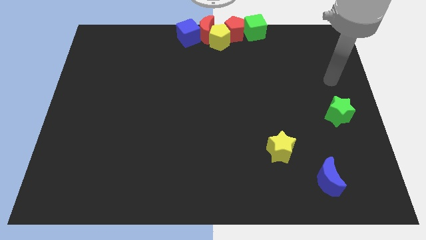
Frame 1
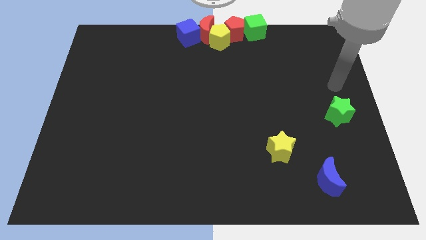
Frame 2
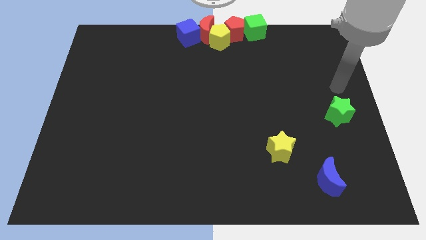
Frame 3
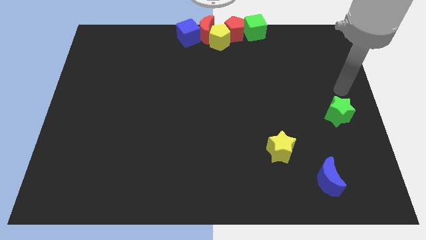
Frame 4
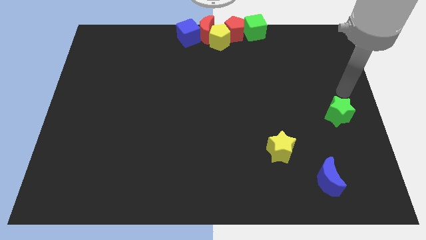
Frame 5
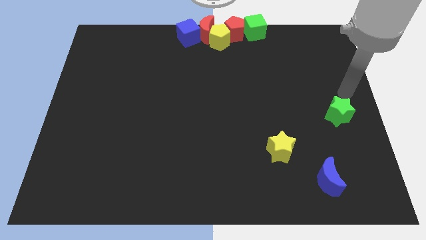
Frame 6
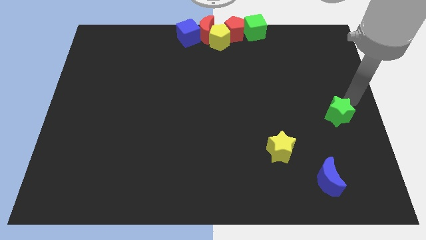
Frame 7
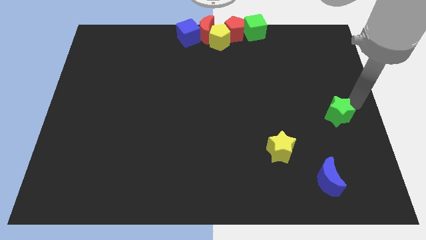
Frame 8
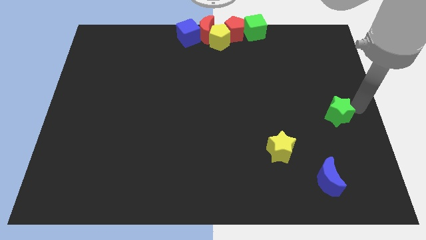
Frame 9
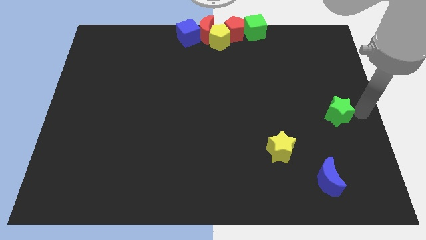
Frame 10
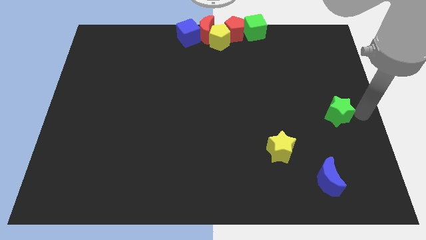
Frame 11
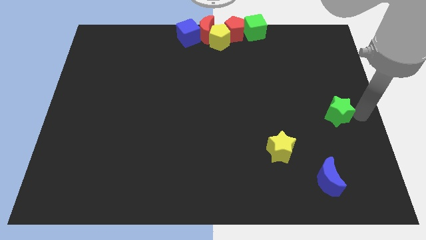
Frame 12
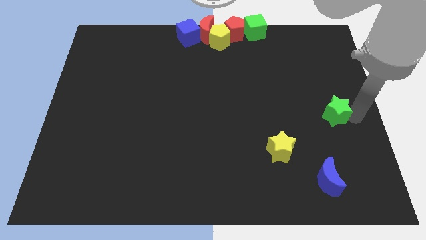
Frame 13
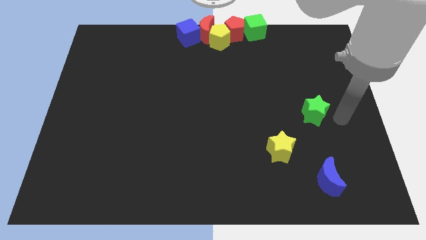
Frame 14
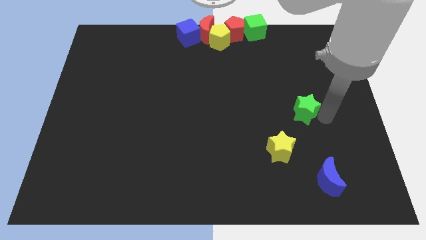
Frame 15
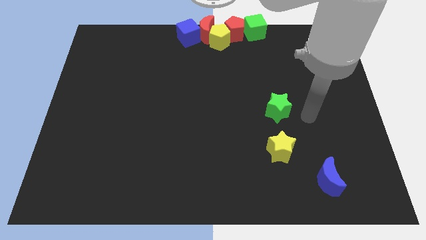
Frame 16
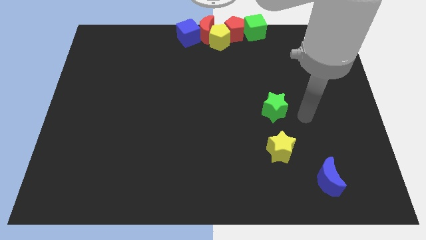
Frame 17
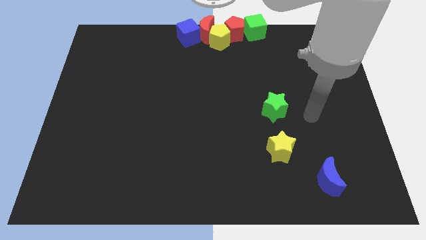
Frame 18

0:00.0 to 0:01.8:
move the green star vertical to the yellow star

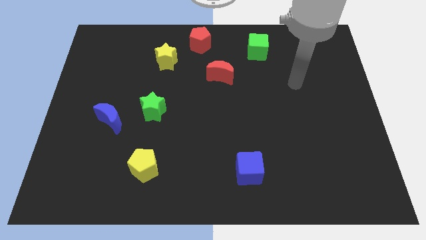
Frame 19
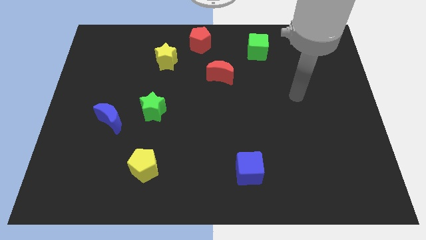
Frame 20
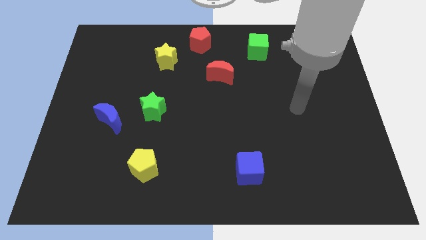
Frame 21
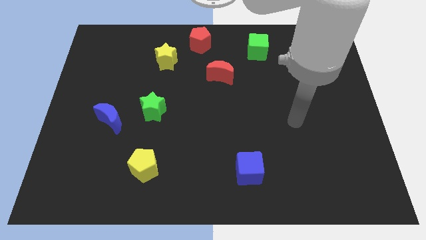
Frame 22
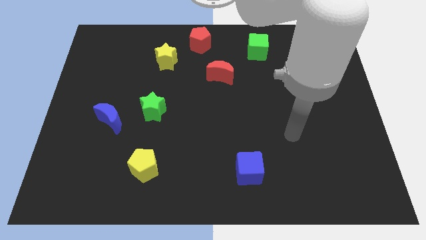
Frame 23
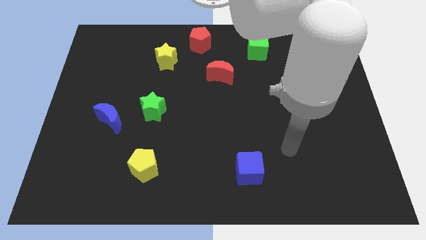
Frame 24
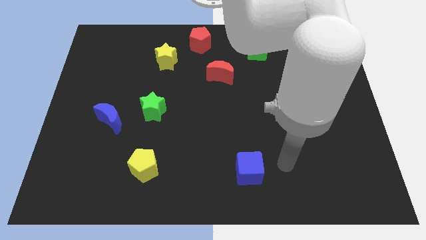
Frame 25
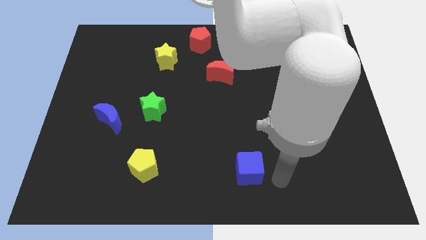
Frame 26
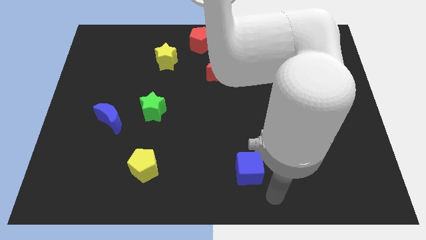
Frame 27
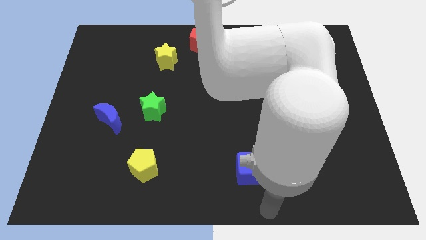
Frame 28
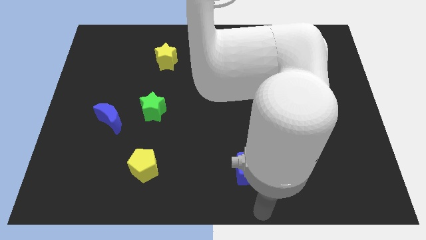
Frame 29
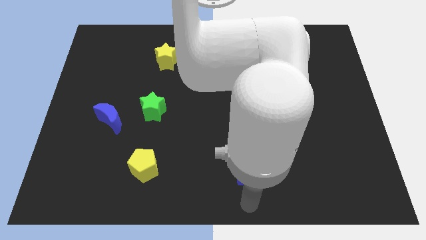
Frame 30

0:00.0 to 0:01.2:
move your arm to the bottom of the blue cube

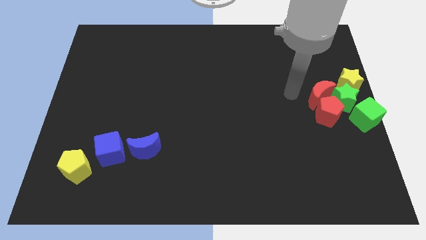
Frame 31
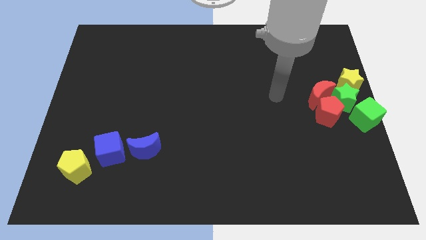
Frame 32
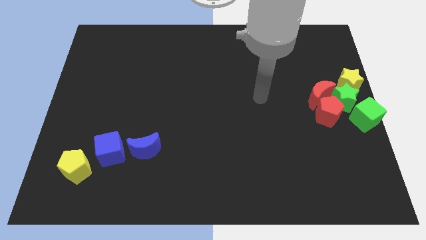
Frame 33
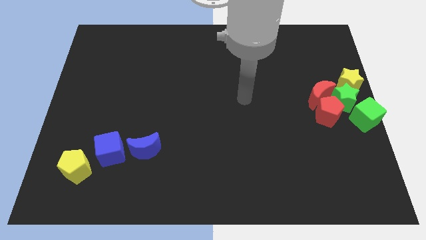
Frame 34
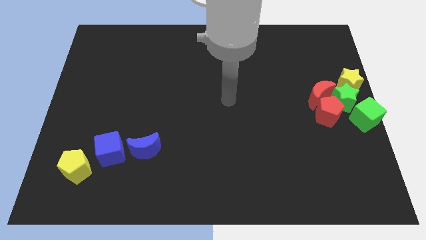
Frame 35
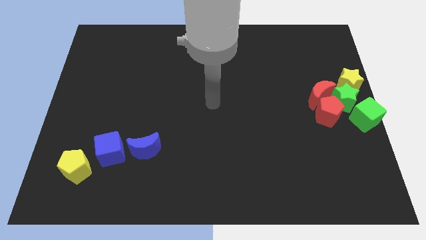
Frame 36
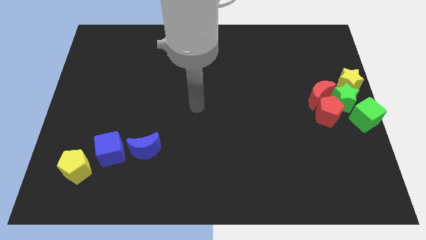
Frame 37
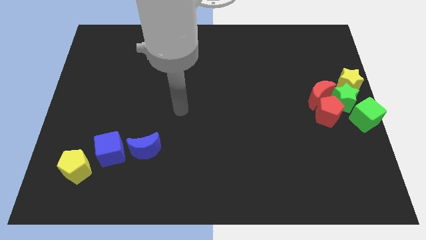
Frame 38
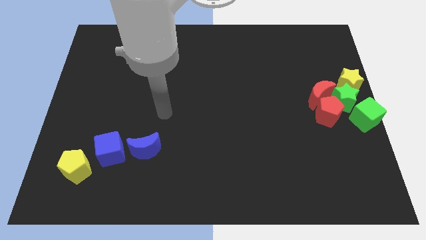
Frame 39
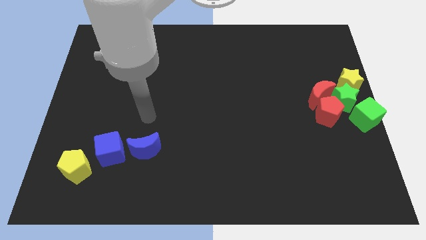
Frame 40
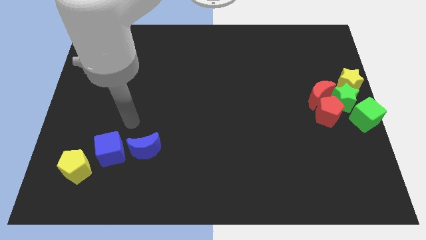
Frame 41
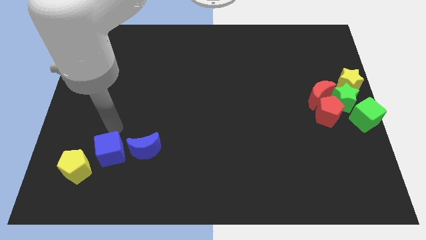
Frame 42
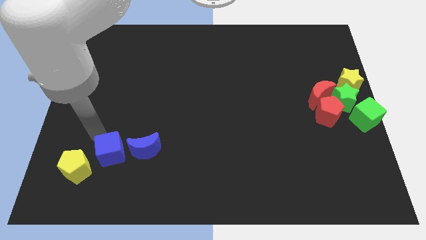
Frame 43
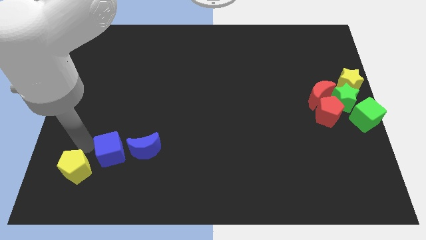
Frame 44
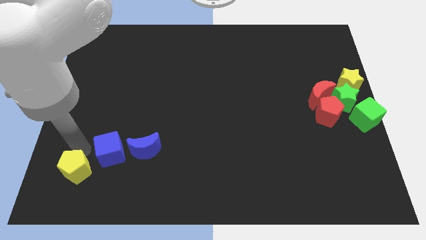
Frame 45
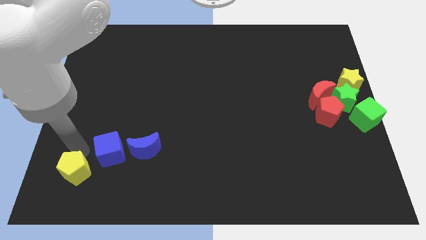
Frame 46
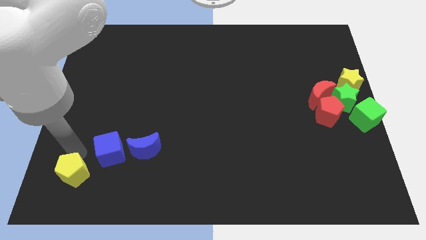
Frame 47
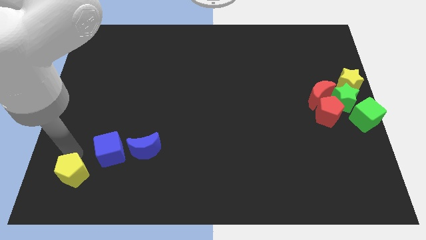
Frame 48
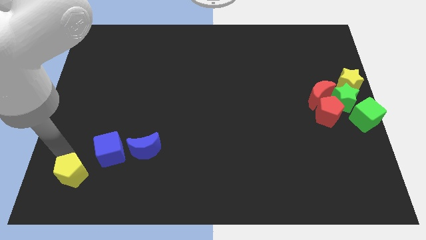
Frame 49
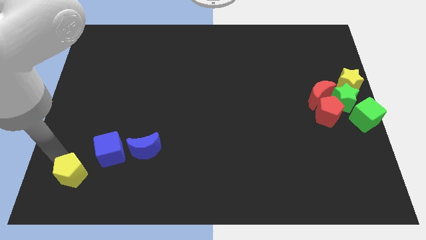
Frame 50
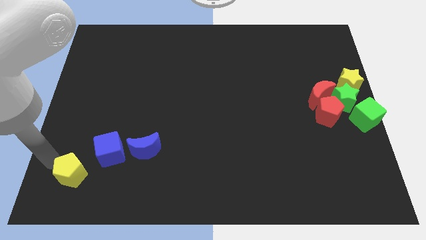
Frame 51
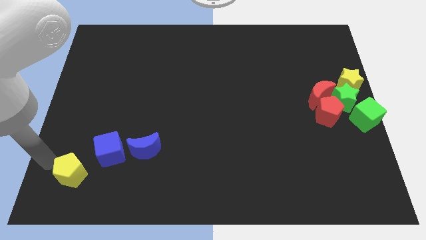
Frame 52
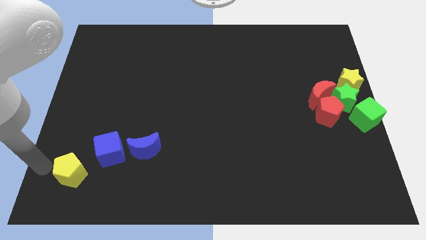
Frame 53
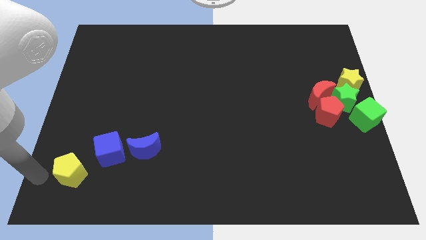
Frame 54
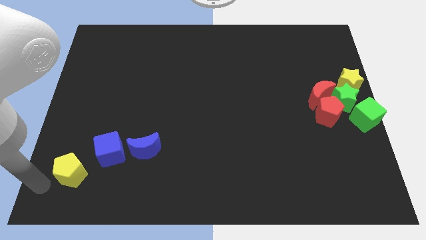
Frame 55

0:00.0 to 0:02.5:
slightly touch on the yellow pentagon

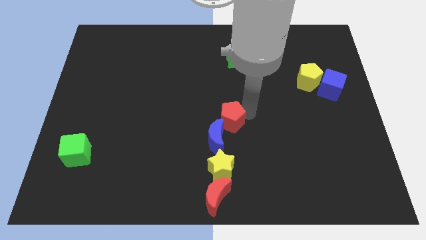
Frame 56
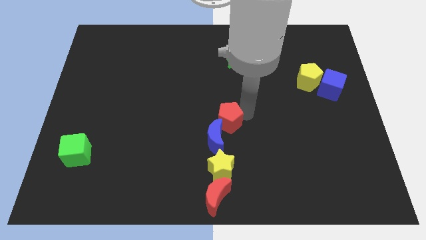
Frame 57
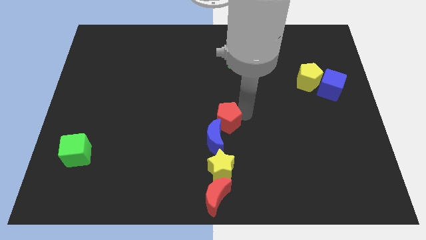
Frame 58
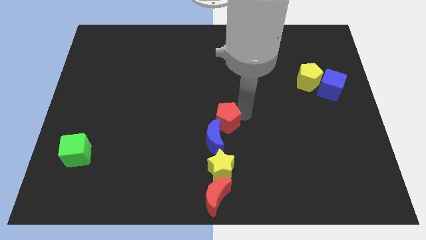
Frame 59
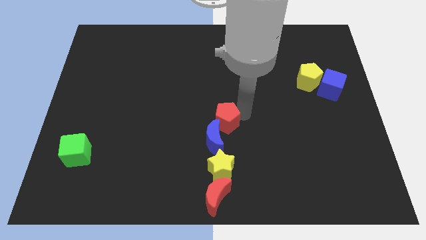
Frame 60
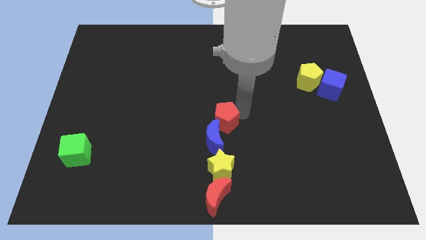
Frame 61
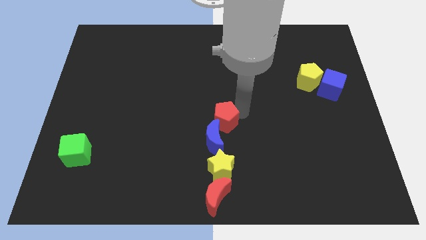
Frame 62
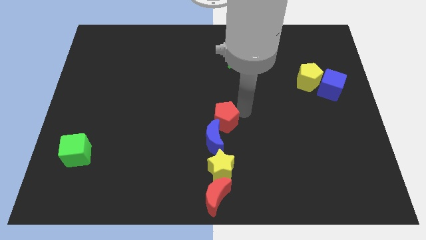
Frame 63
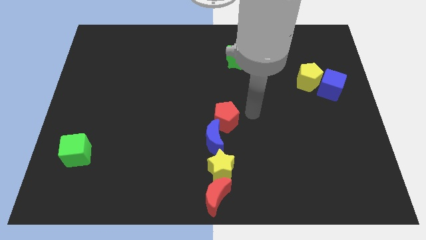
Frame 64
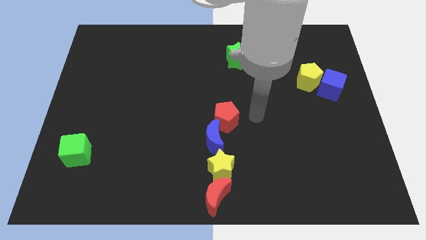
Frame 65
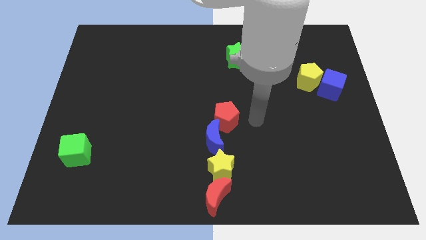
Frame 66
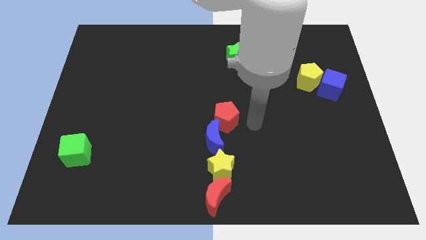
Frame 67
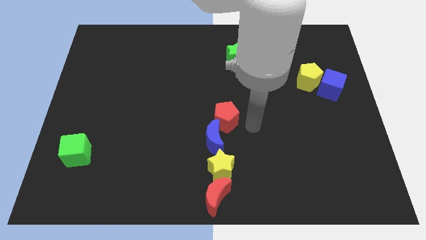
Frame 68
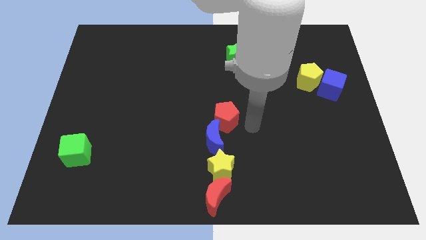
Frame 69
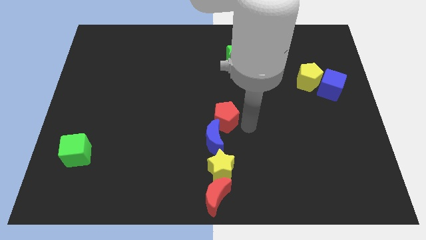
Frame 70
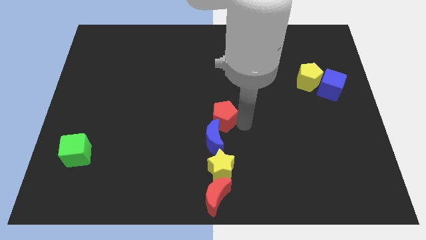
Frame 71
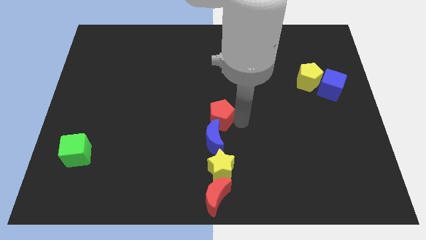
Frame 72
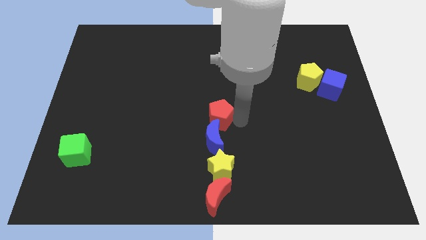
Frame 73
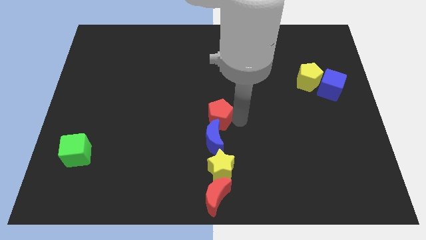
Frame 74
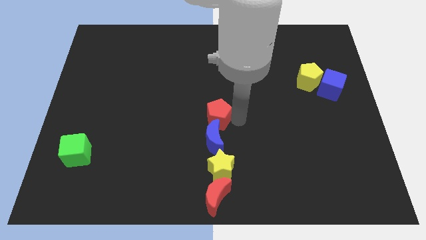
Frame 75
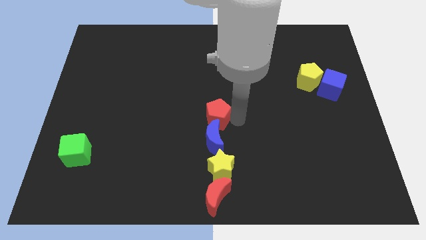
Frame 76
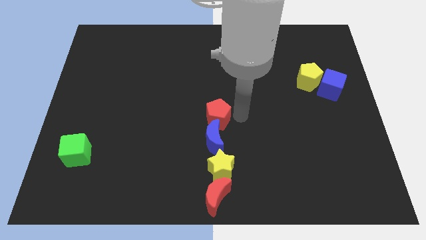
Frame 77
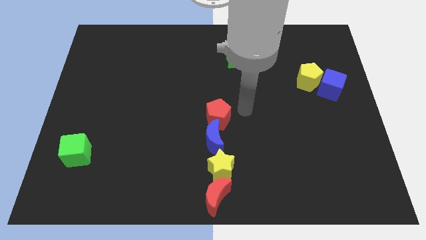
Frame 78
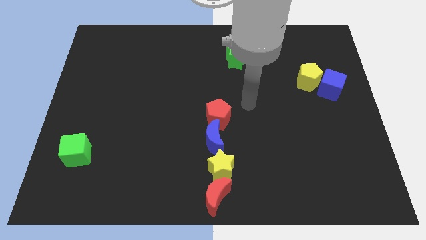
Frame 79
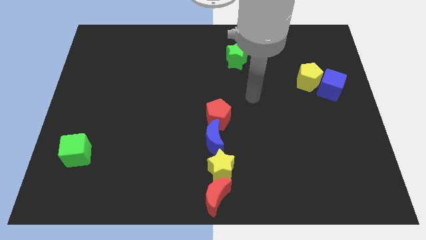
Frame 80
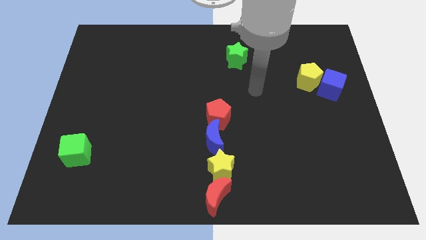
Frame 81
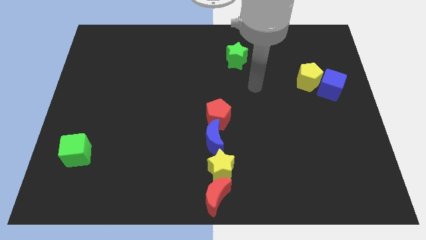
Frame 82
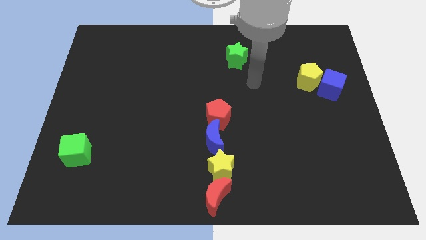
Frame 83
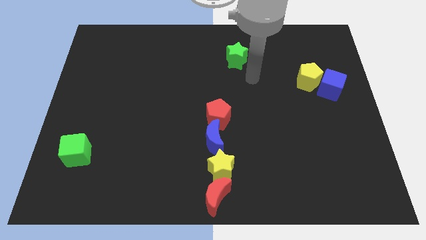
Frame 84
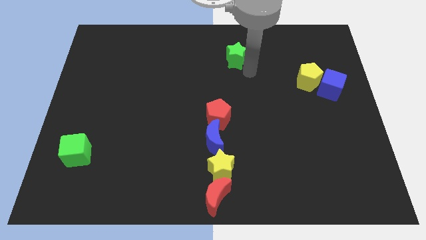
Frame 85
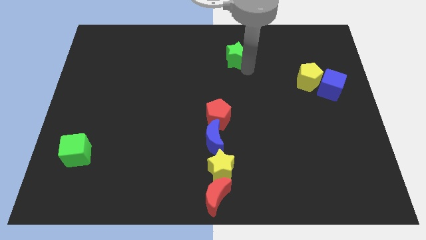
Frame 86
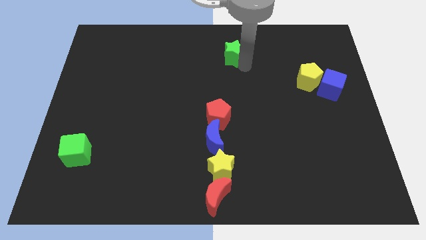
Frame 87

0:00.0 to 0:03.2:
move your arm way from red pentagon

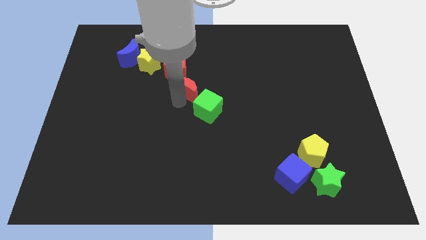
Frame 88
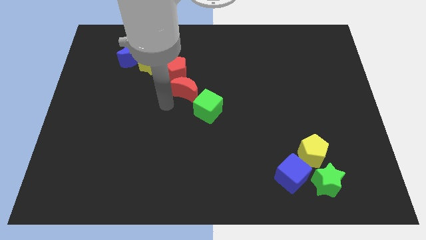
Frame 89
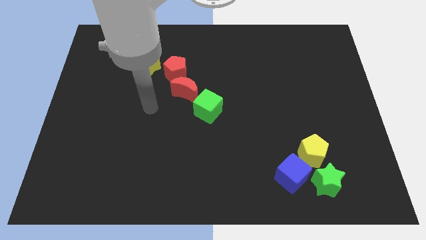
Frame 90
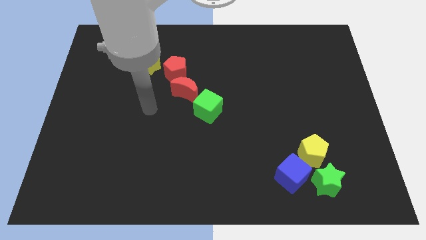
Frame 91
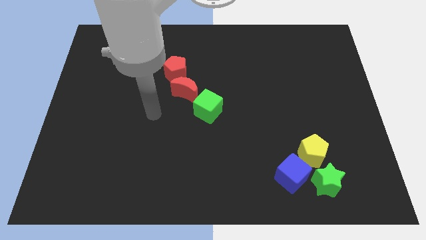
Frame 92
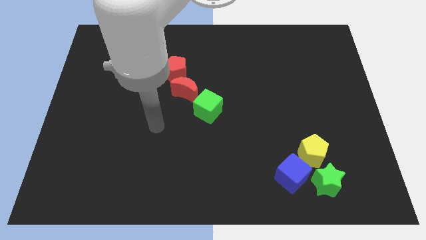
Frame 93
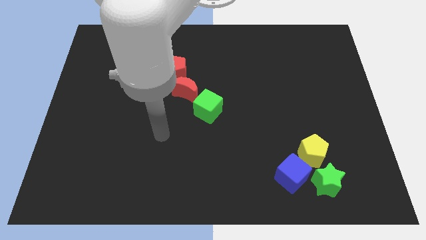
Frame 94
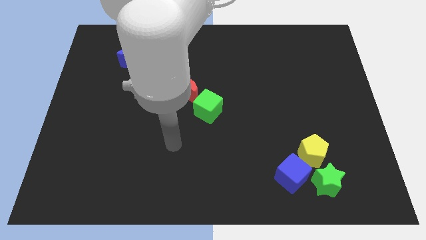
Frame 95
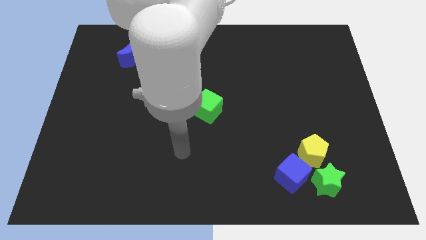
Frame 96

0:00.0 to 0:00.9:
move the arm away from the red moon
